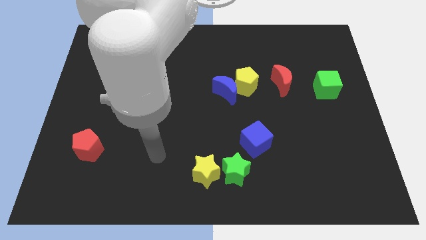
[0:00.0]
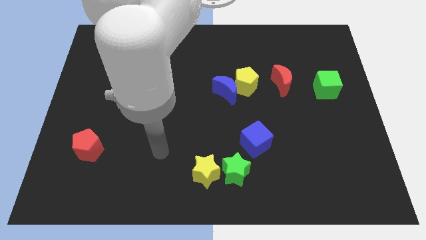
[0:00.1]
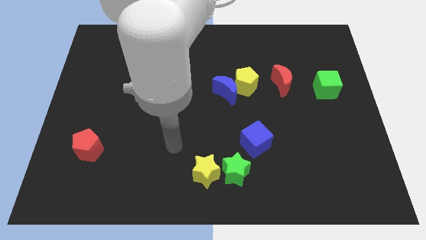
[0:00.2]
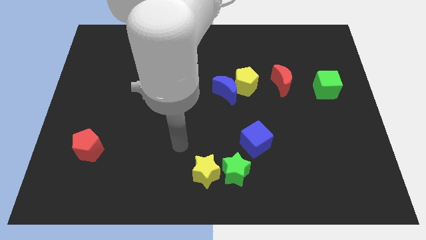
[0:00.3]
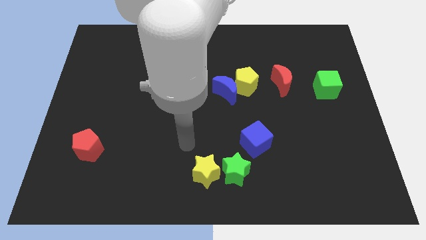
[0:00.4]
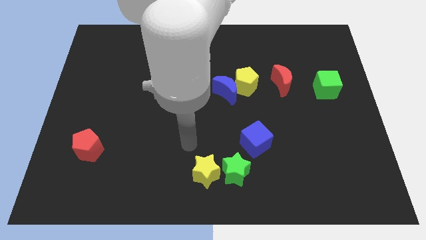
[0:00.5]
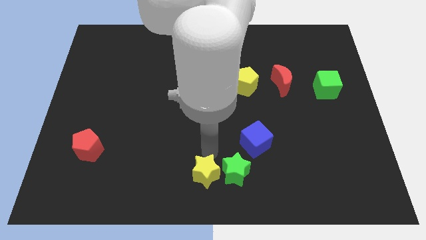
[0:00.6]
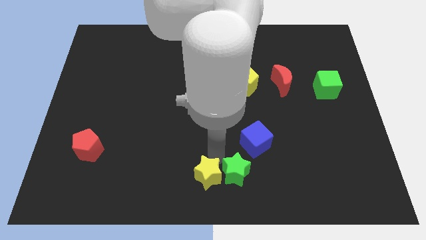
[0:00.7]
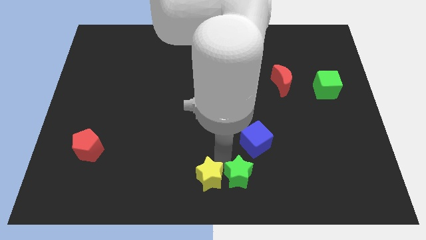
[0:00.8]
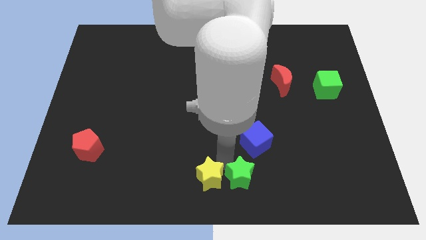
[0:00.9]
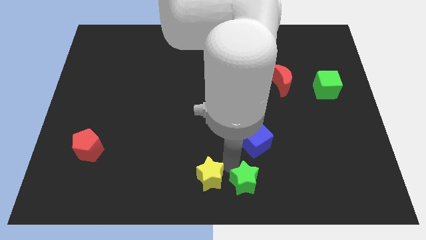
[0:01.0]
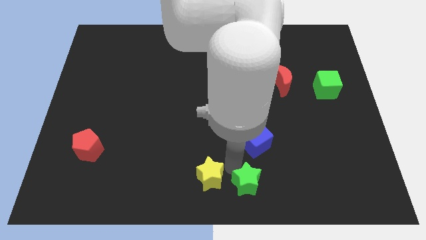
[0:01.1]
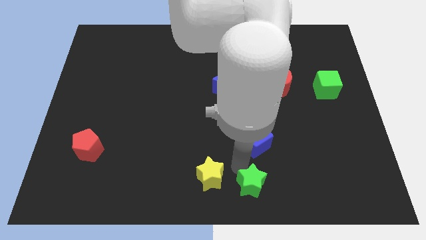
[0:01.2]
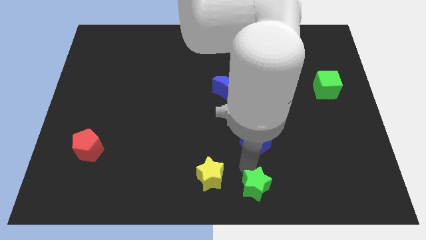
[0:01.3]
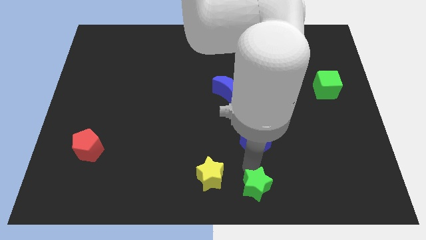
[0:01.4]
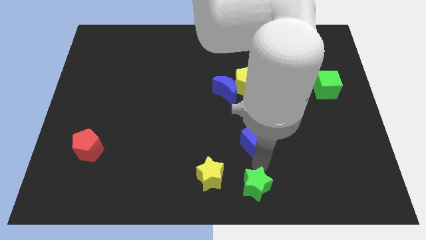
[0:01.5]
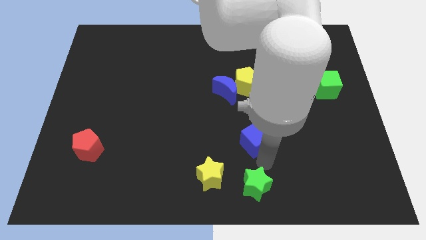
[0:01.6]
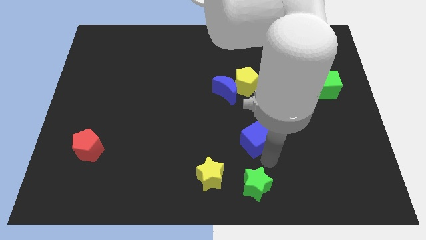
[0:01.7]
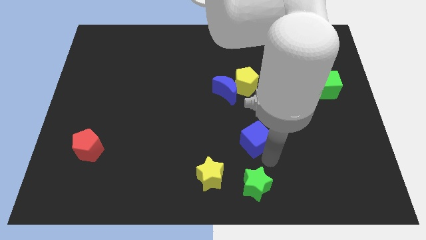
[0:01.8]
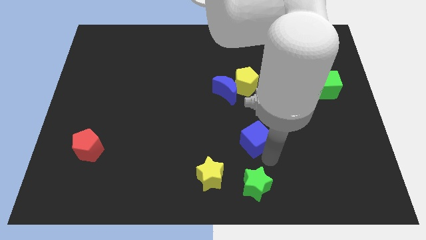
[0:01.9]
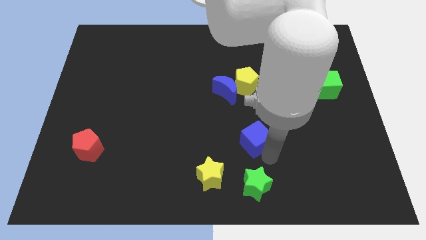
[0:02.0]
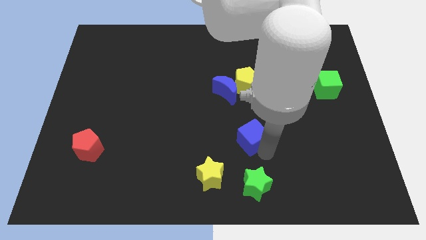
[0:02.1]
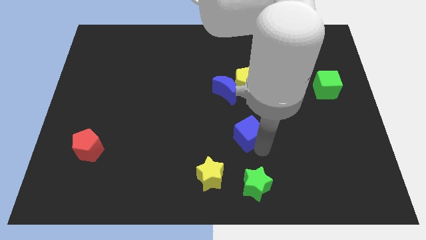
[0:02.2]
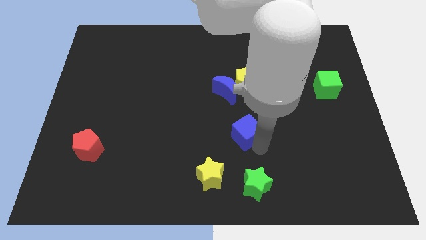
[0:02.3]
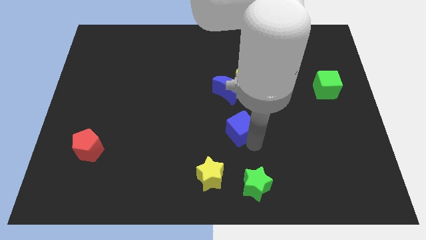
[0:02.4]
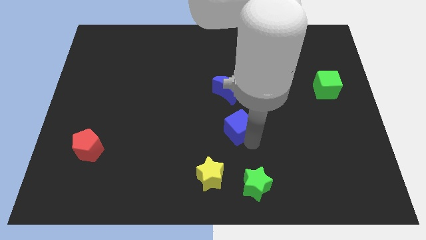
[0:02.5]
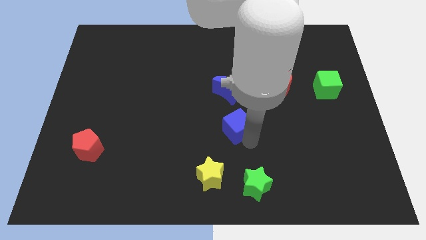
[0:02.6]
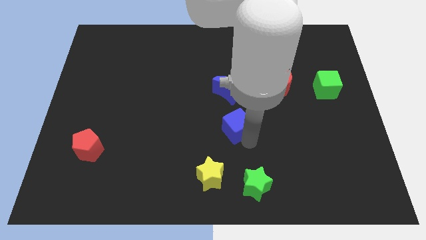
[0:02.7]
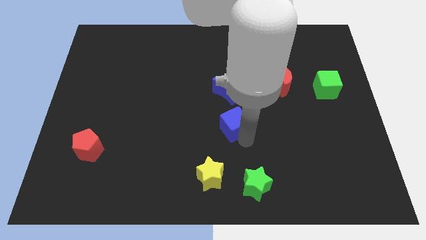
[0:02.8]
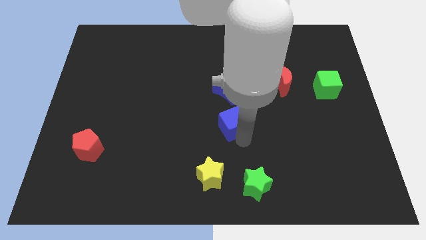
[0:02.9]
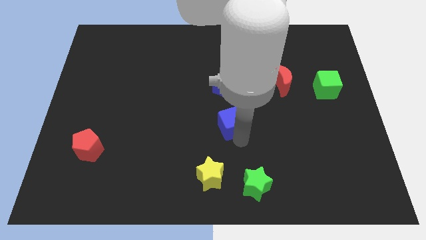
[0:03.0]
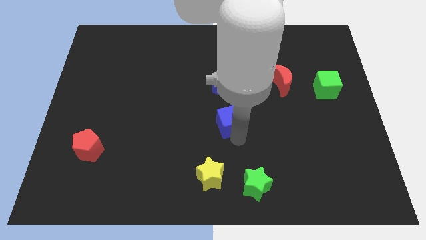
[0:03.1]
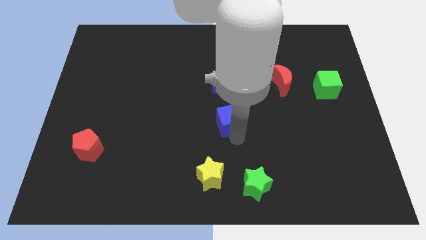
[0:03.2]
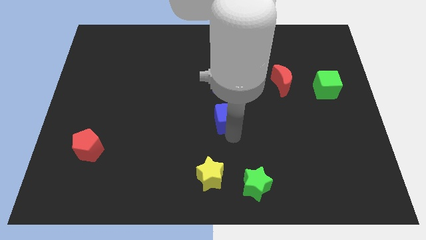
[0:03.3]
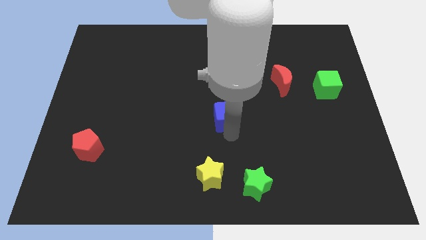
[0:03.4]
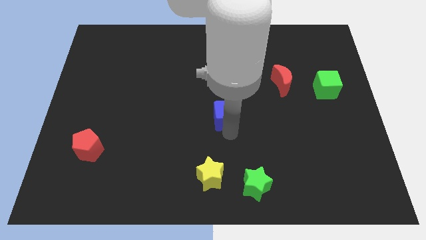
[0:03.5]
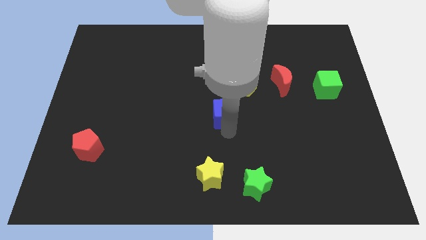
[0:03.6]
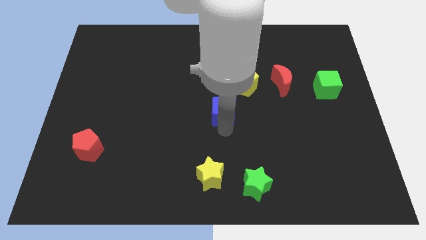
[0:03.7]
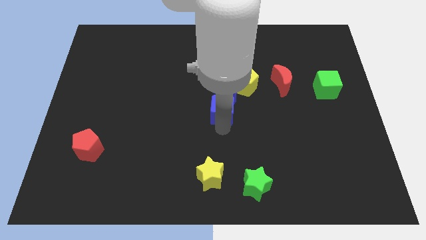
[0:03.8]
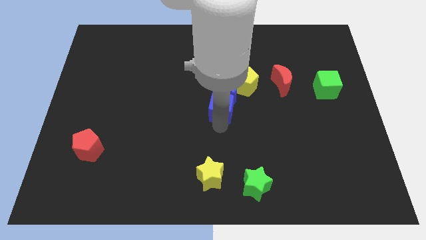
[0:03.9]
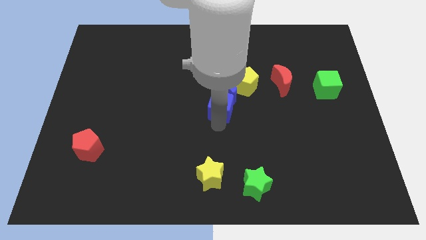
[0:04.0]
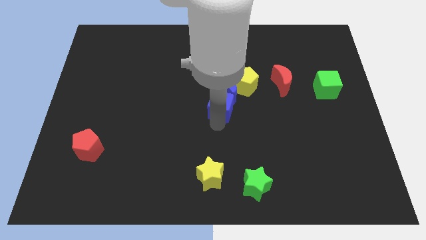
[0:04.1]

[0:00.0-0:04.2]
move the blue cube towards the blue moon

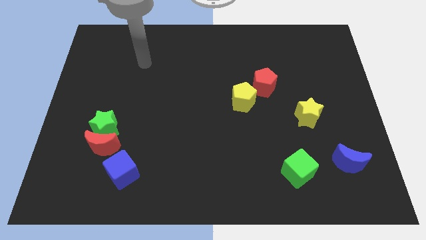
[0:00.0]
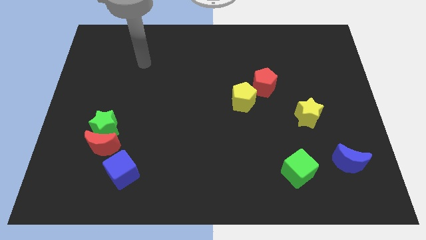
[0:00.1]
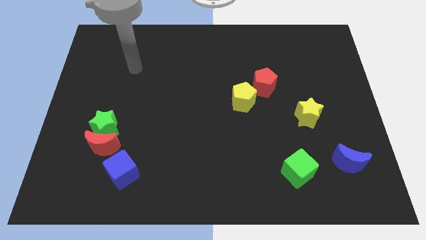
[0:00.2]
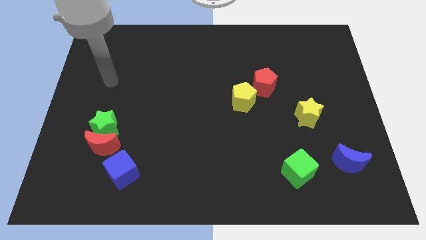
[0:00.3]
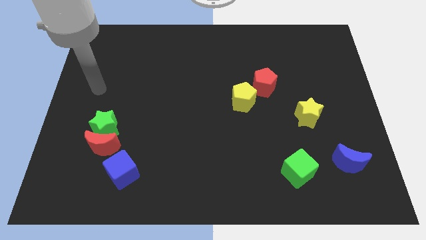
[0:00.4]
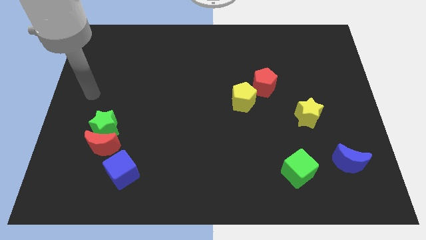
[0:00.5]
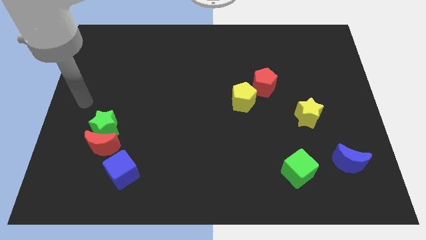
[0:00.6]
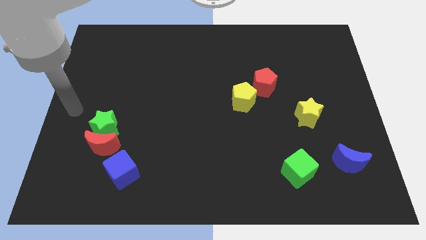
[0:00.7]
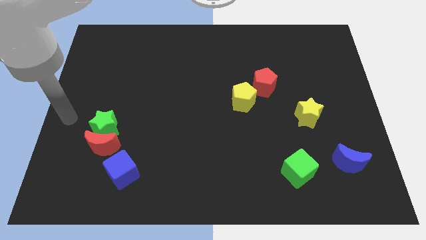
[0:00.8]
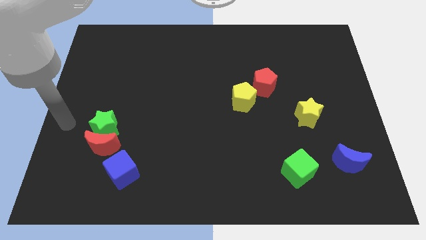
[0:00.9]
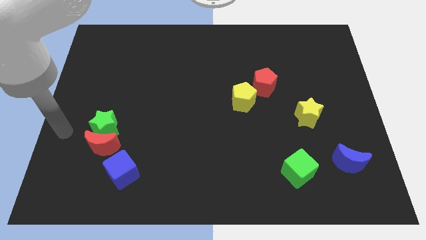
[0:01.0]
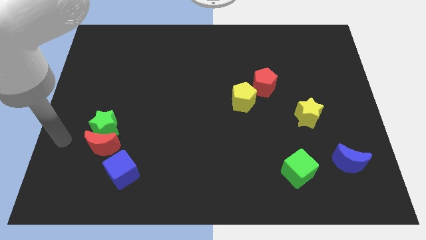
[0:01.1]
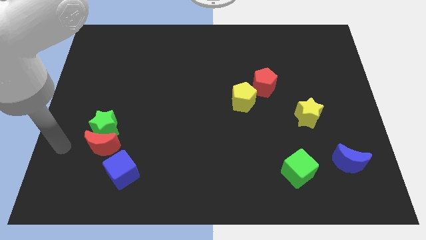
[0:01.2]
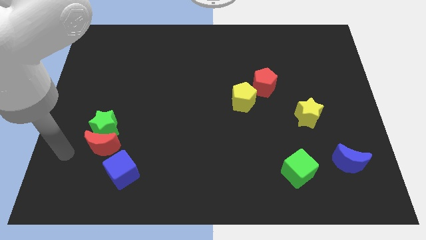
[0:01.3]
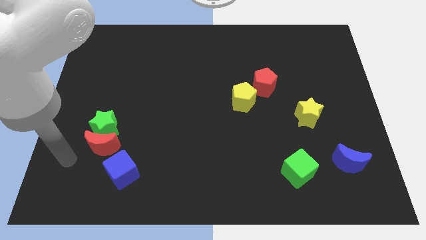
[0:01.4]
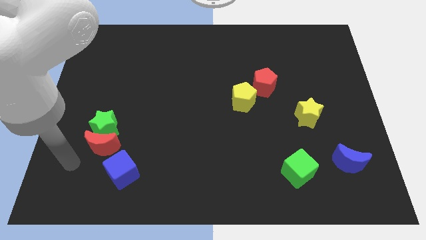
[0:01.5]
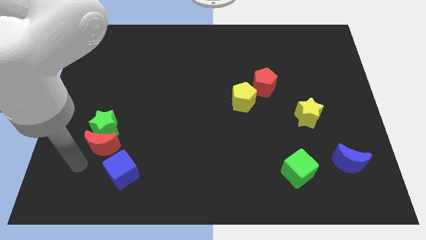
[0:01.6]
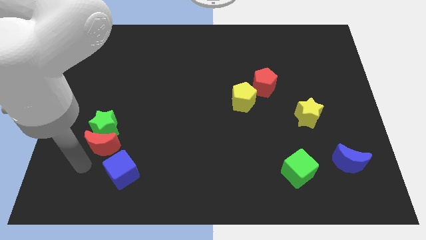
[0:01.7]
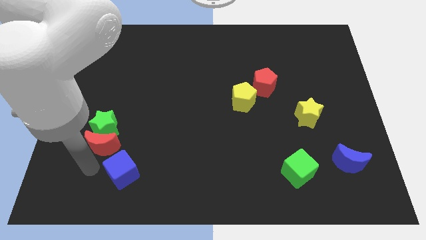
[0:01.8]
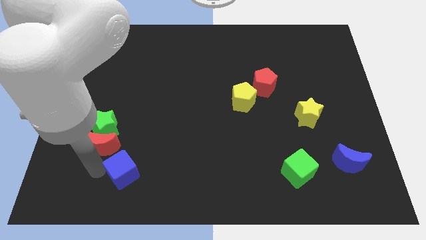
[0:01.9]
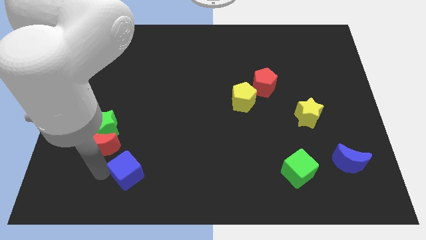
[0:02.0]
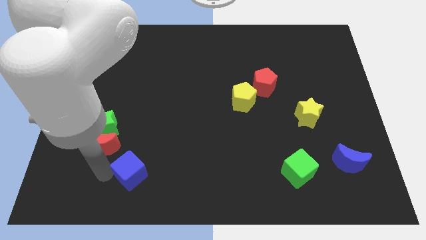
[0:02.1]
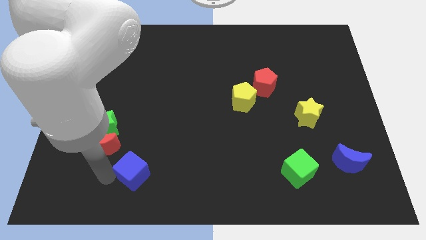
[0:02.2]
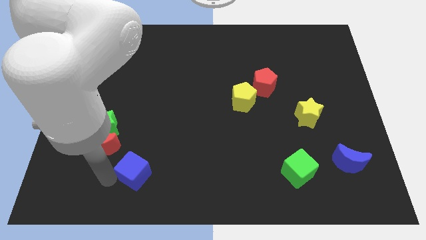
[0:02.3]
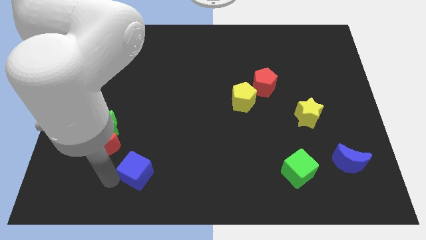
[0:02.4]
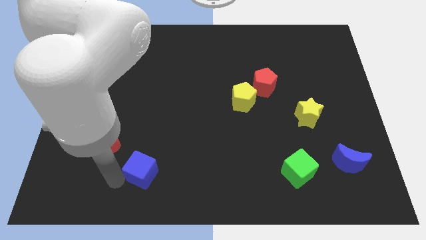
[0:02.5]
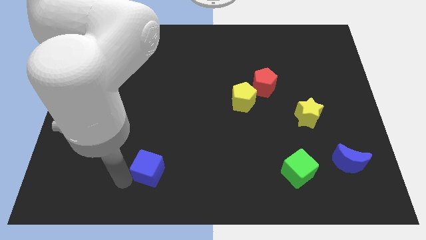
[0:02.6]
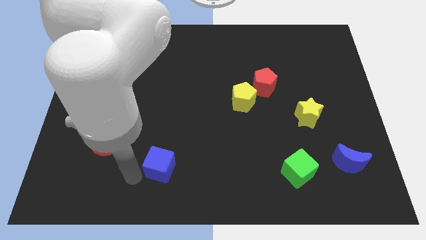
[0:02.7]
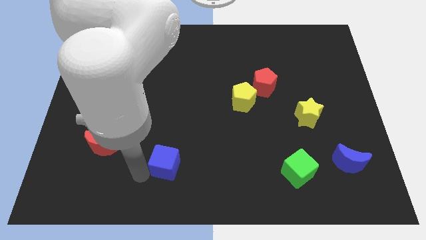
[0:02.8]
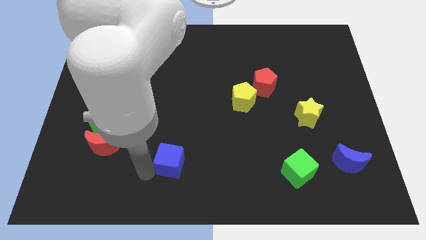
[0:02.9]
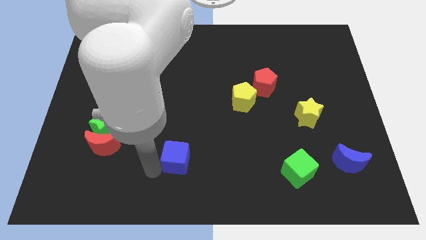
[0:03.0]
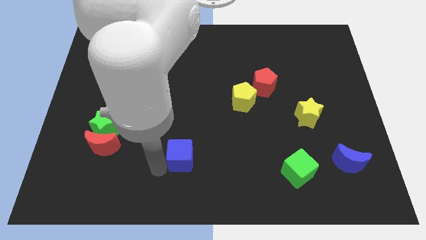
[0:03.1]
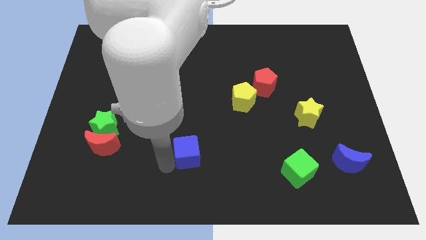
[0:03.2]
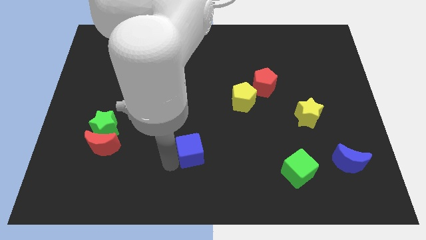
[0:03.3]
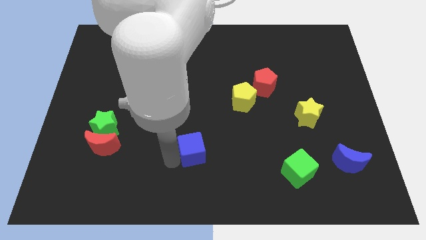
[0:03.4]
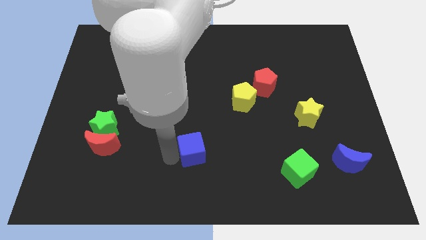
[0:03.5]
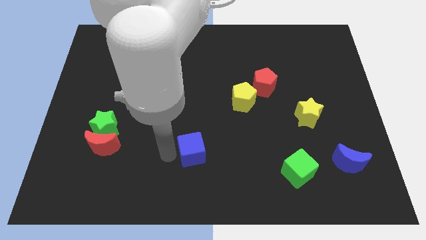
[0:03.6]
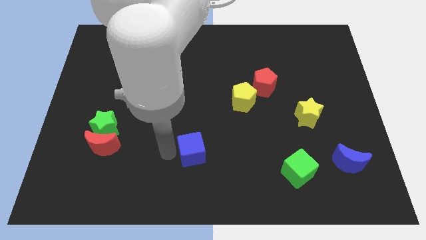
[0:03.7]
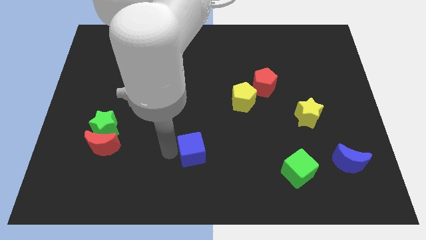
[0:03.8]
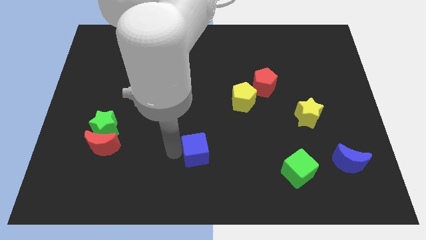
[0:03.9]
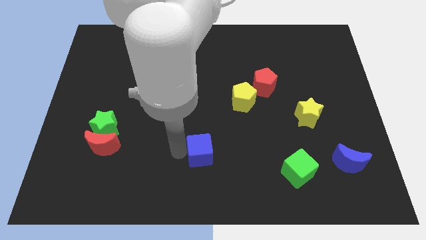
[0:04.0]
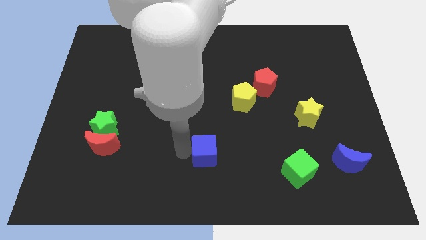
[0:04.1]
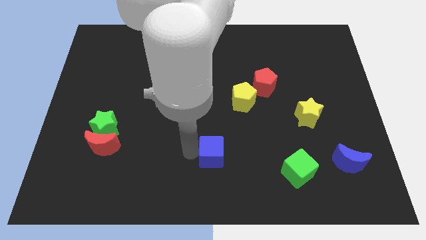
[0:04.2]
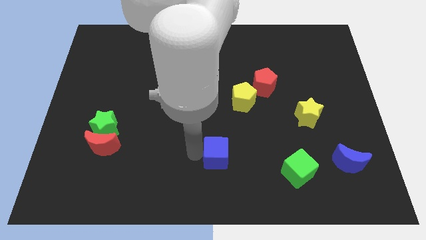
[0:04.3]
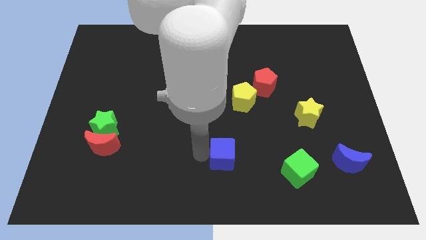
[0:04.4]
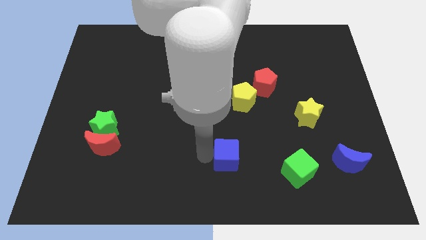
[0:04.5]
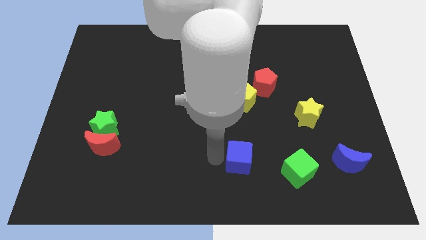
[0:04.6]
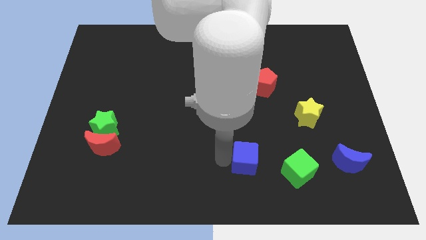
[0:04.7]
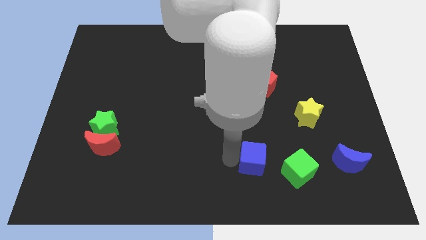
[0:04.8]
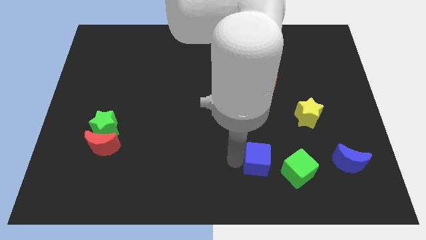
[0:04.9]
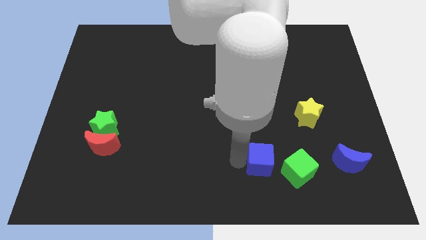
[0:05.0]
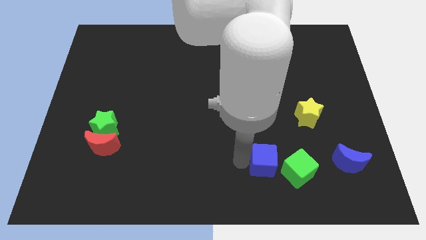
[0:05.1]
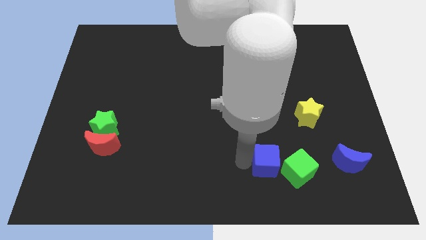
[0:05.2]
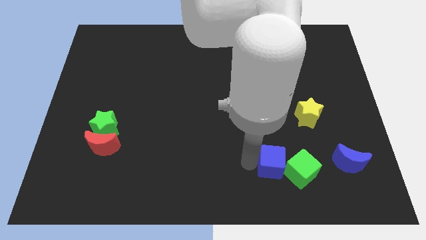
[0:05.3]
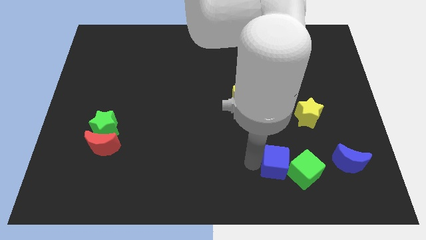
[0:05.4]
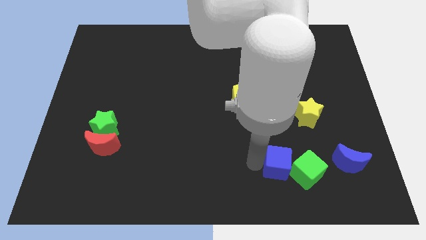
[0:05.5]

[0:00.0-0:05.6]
put the blue cube close to the green cube
